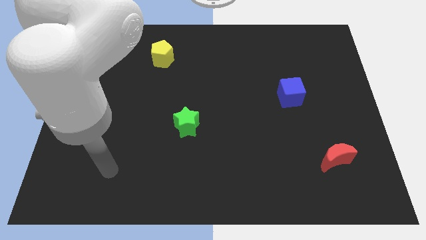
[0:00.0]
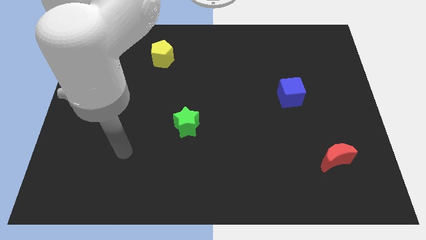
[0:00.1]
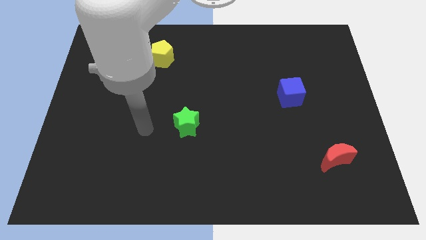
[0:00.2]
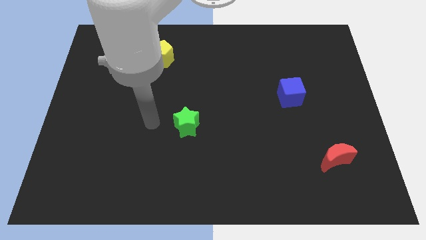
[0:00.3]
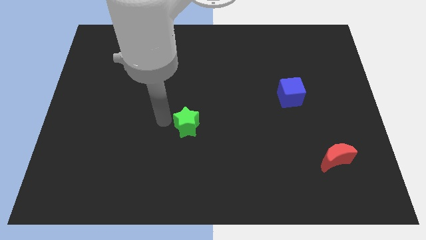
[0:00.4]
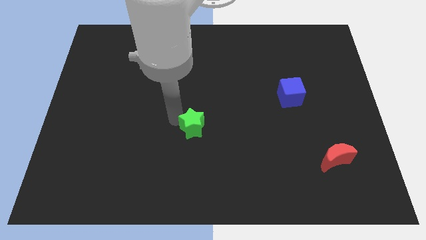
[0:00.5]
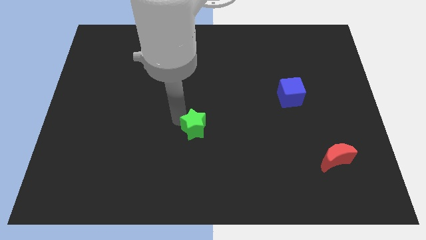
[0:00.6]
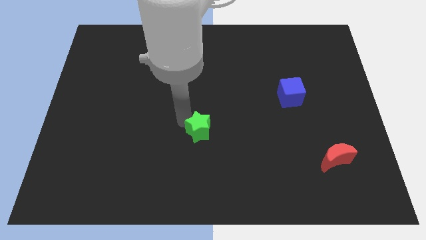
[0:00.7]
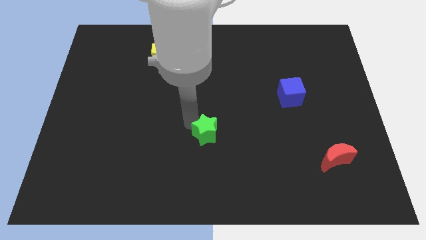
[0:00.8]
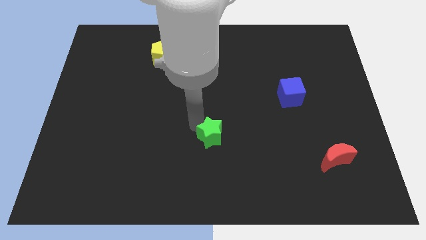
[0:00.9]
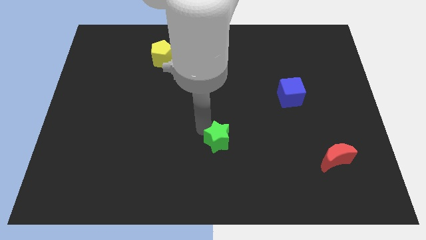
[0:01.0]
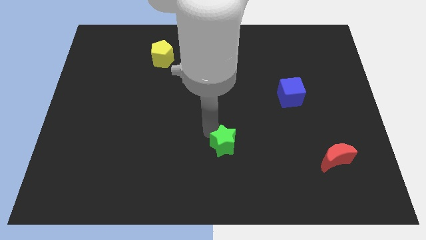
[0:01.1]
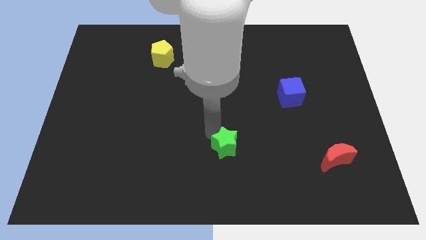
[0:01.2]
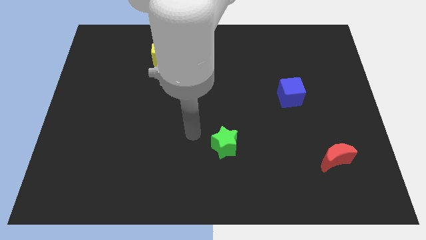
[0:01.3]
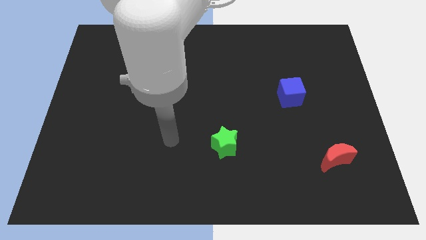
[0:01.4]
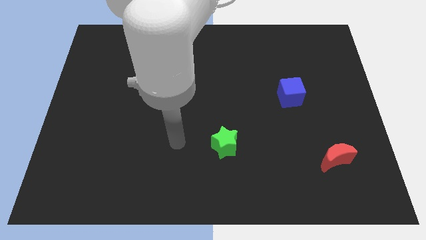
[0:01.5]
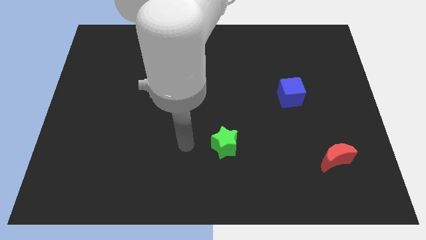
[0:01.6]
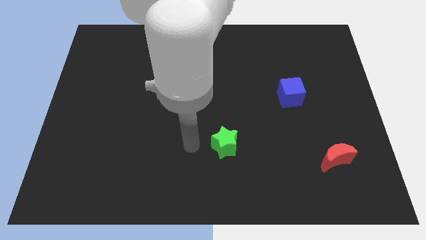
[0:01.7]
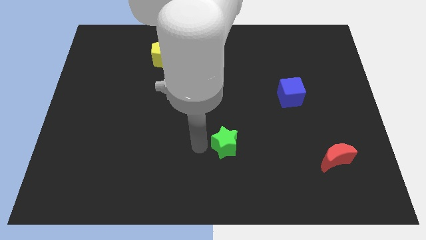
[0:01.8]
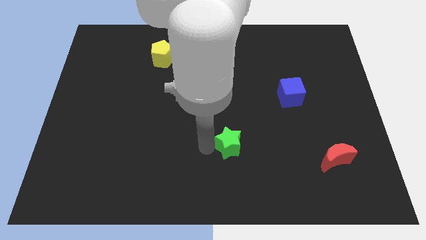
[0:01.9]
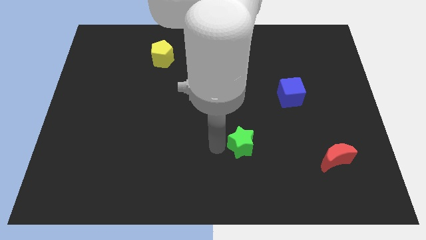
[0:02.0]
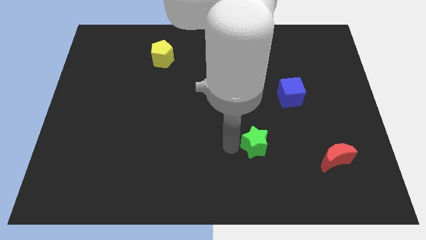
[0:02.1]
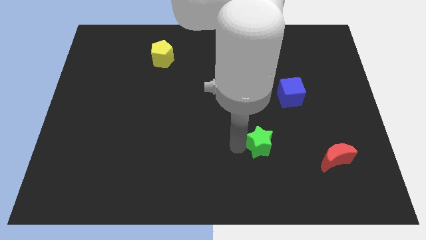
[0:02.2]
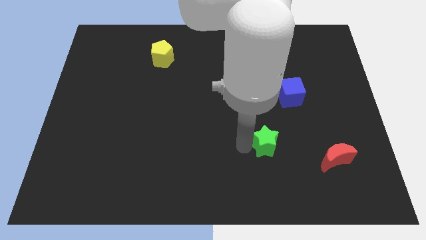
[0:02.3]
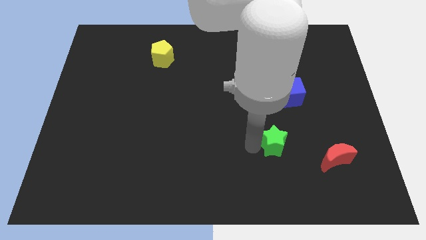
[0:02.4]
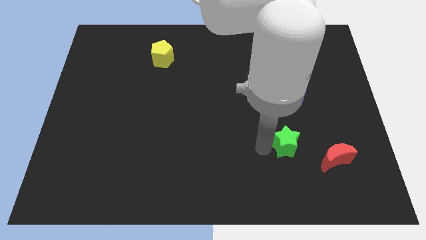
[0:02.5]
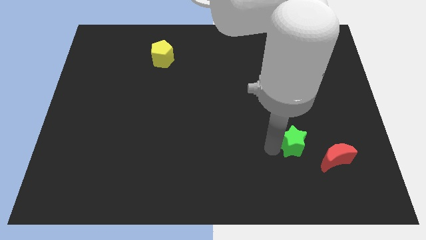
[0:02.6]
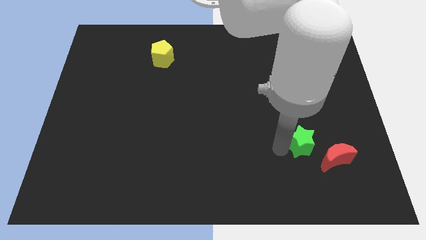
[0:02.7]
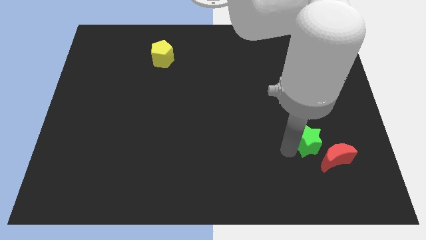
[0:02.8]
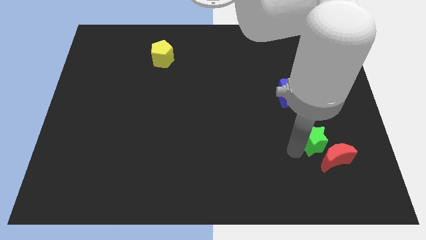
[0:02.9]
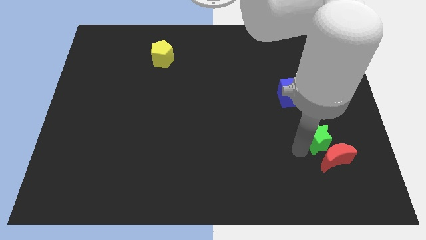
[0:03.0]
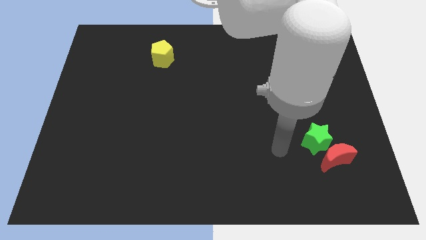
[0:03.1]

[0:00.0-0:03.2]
push the green block close to the red block

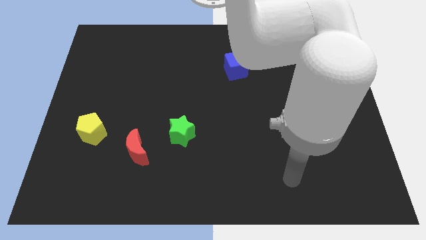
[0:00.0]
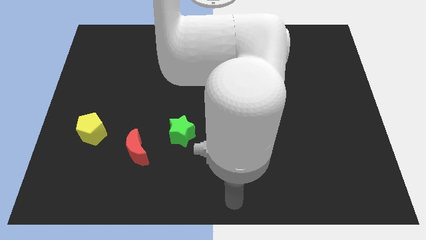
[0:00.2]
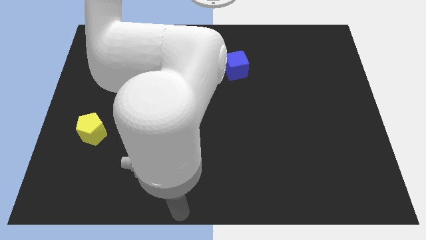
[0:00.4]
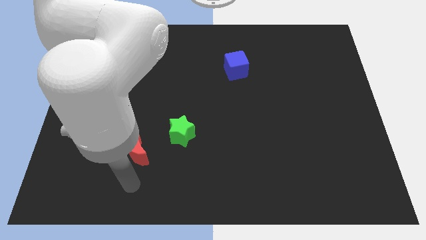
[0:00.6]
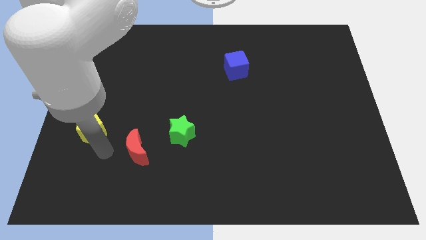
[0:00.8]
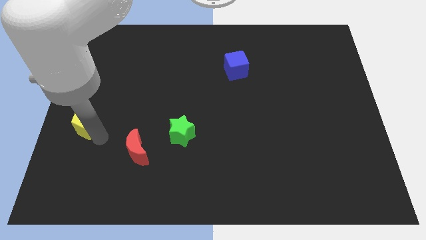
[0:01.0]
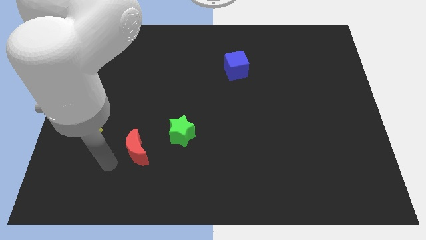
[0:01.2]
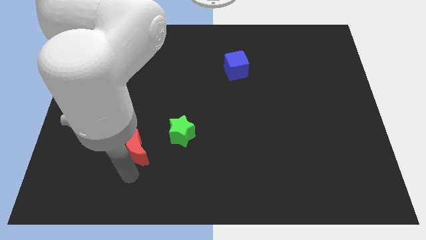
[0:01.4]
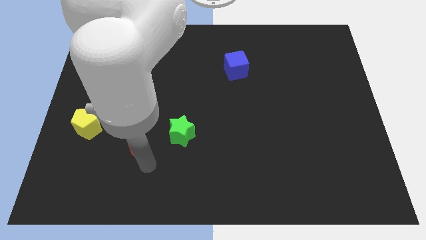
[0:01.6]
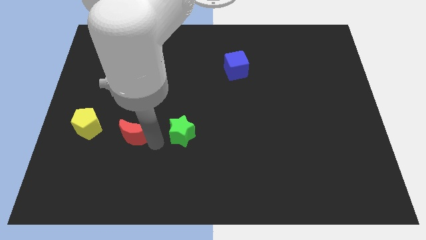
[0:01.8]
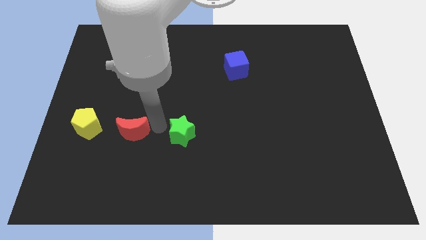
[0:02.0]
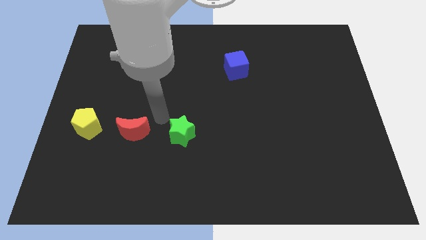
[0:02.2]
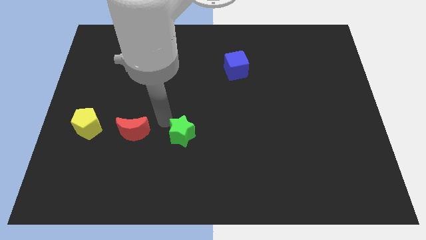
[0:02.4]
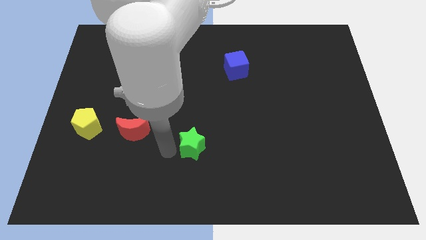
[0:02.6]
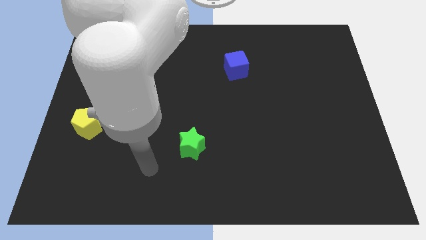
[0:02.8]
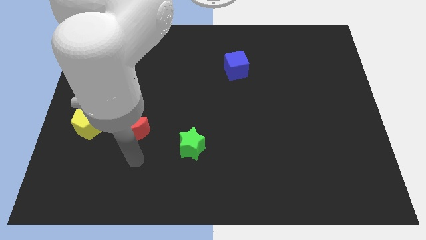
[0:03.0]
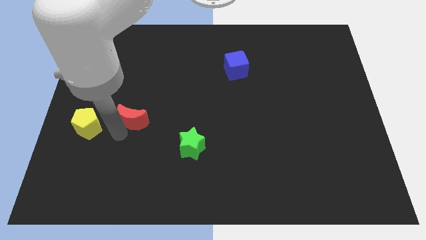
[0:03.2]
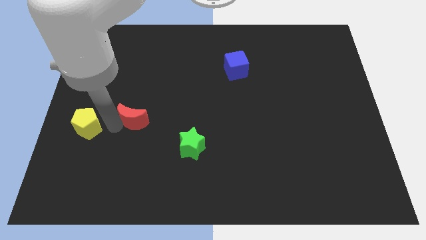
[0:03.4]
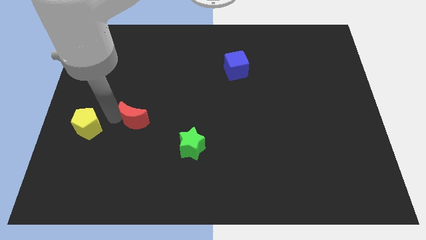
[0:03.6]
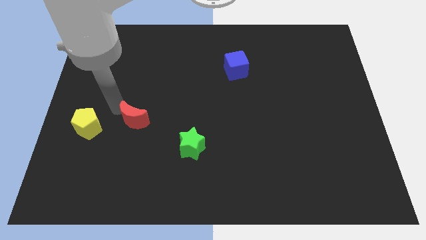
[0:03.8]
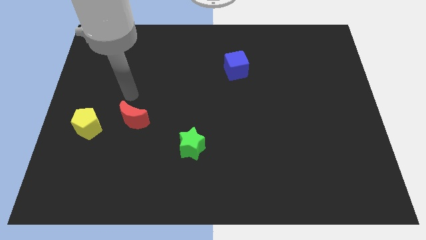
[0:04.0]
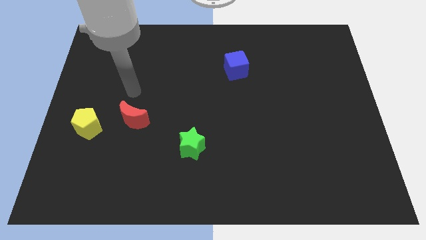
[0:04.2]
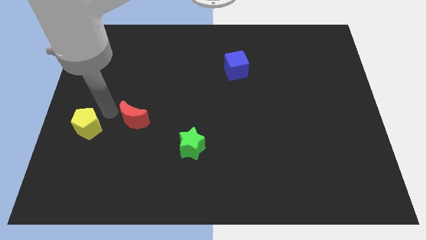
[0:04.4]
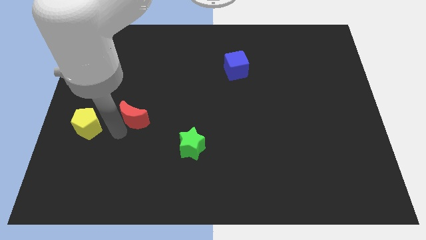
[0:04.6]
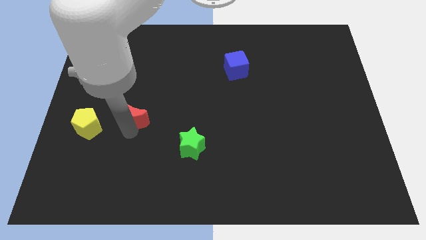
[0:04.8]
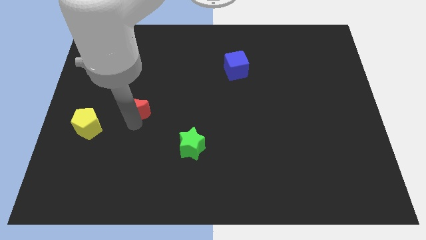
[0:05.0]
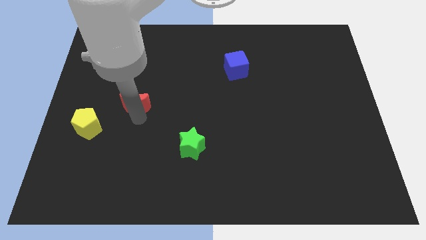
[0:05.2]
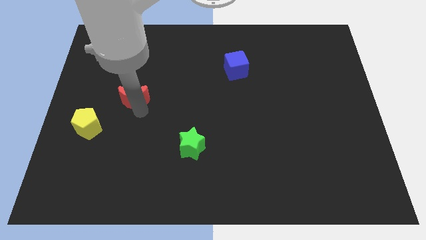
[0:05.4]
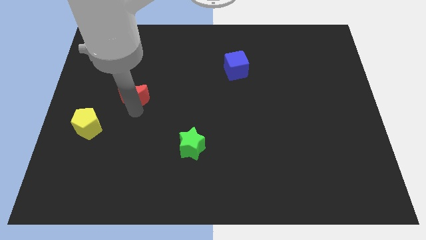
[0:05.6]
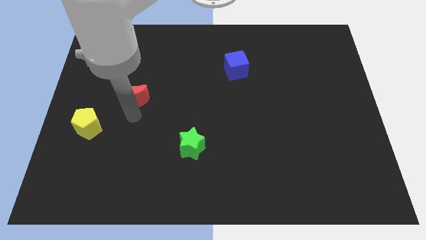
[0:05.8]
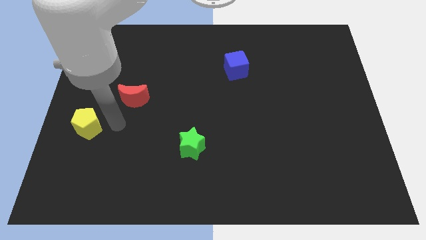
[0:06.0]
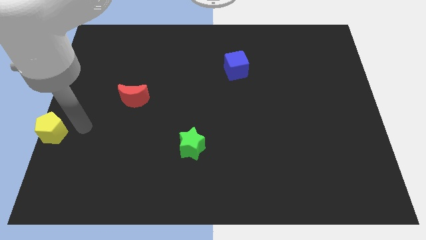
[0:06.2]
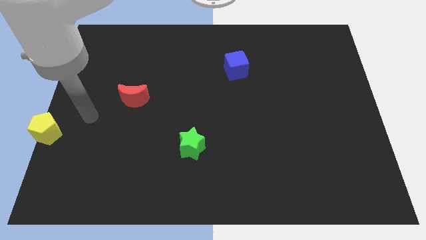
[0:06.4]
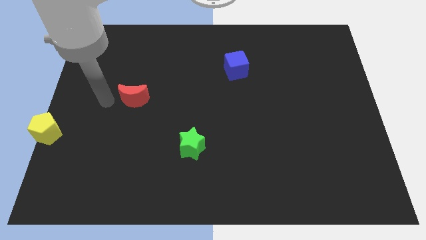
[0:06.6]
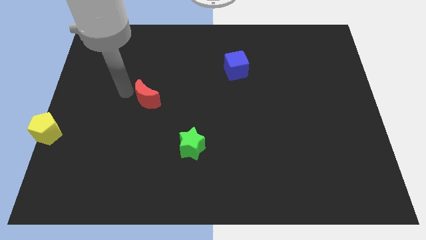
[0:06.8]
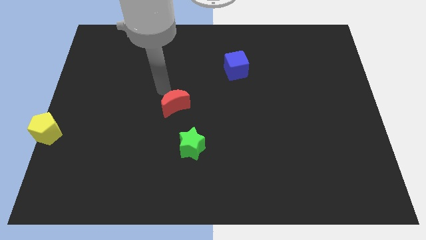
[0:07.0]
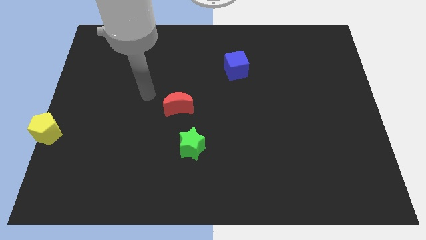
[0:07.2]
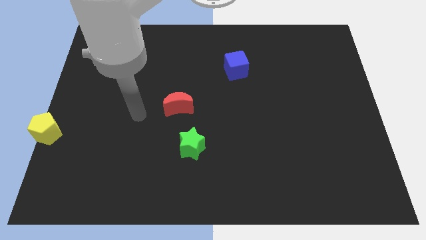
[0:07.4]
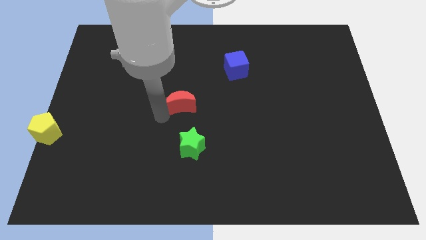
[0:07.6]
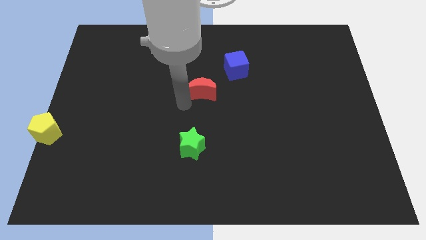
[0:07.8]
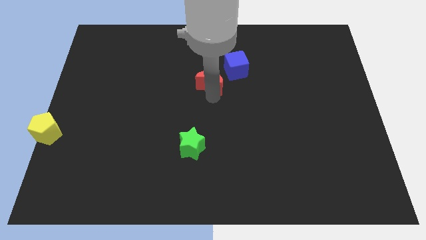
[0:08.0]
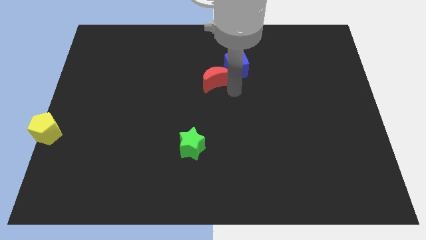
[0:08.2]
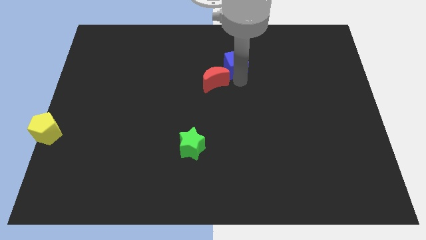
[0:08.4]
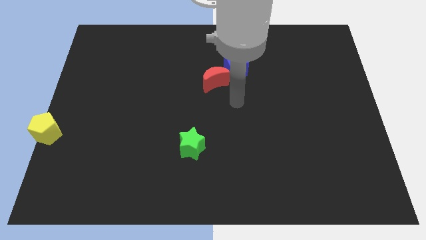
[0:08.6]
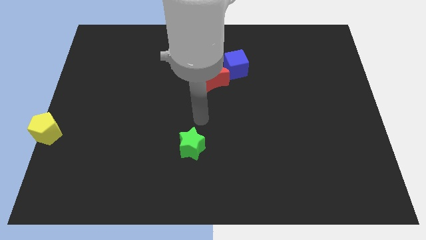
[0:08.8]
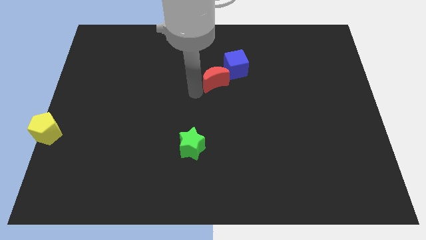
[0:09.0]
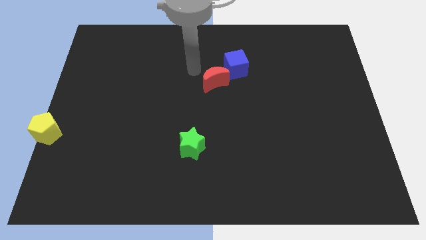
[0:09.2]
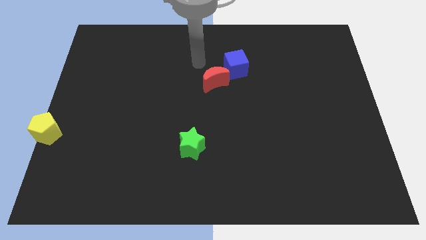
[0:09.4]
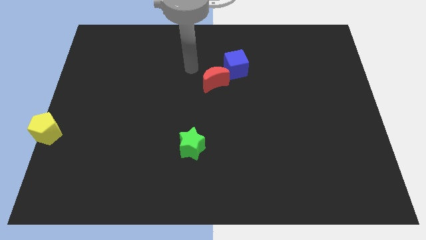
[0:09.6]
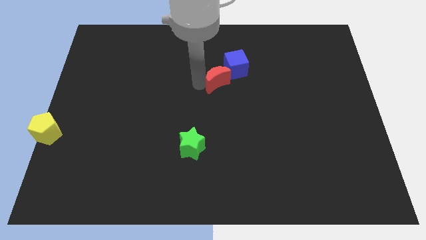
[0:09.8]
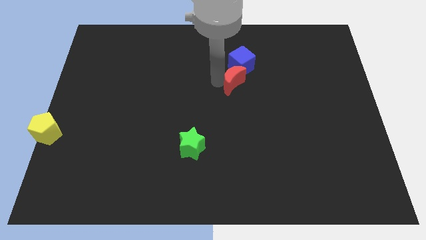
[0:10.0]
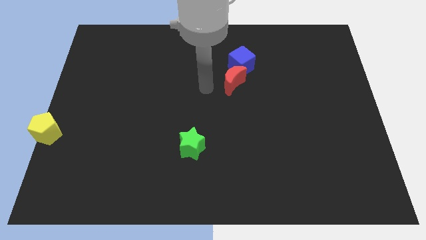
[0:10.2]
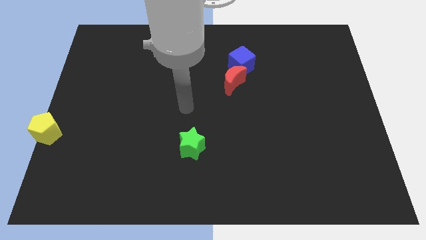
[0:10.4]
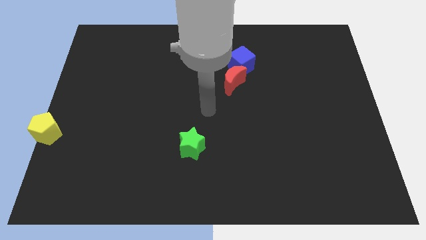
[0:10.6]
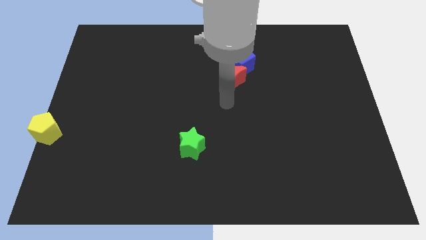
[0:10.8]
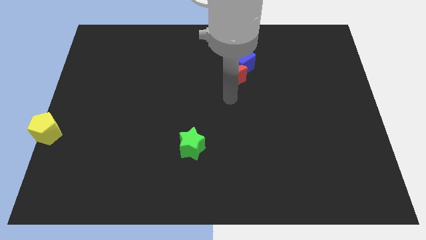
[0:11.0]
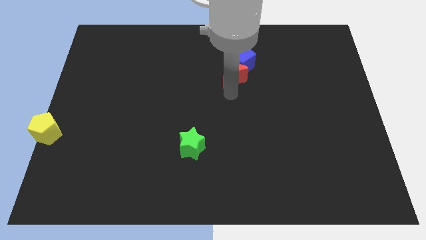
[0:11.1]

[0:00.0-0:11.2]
slide the moon towards the blue block

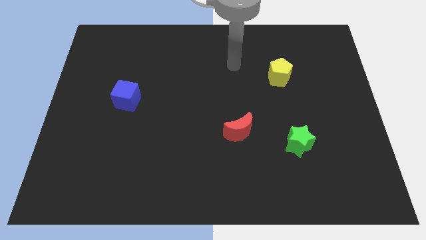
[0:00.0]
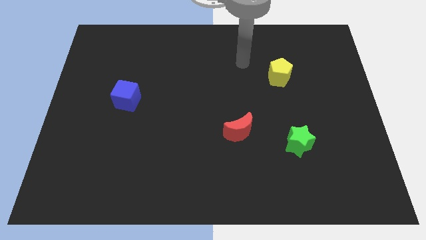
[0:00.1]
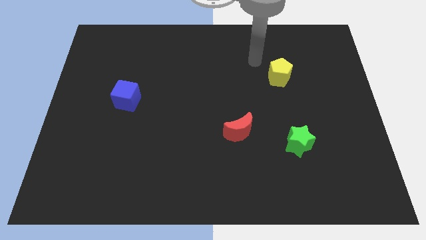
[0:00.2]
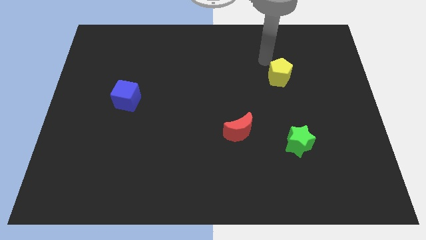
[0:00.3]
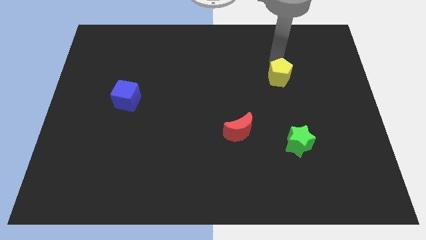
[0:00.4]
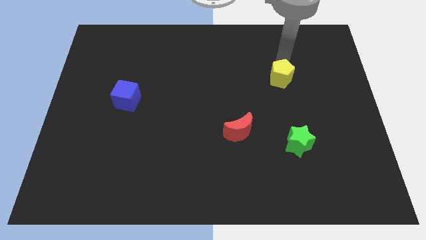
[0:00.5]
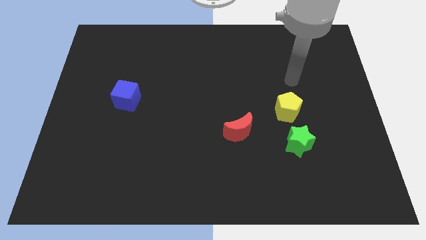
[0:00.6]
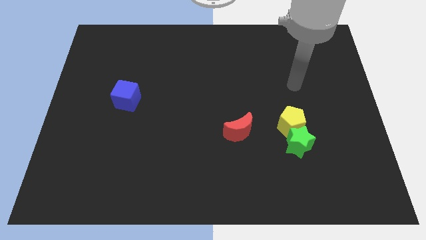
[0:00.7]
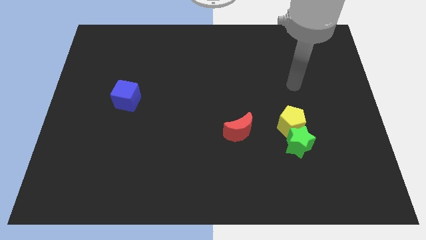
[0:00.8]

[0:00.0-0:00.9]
push the yellow block close to the star
